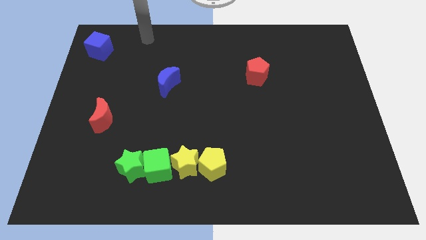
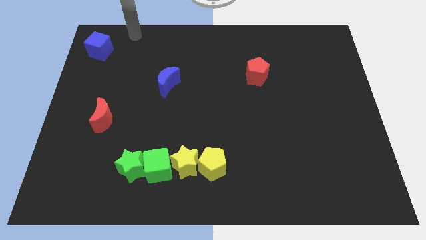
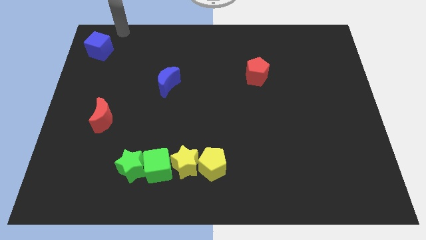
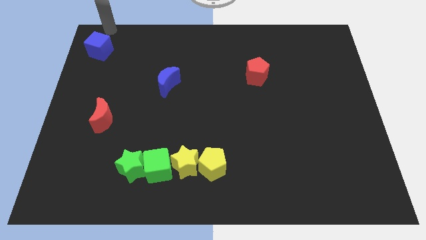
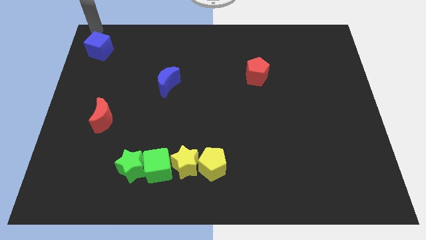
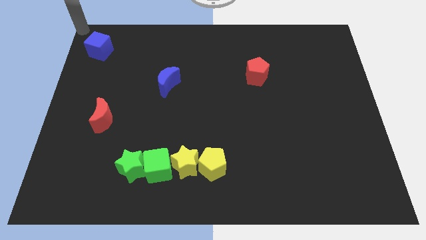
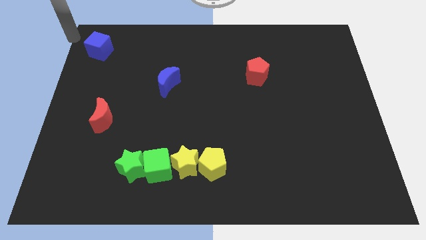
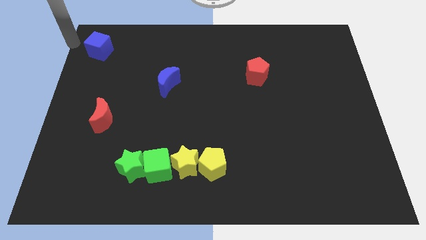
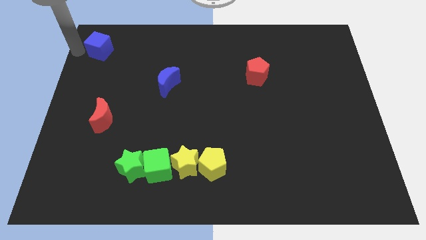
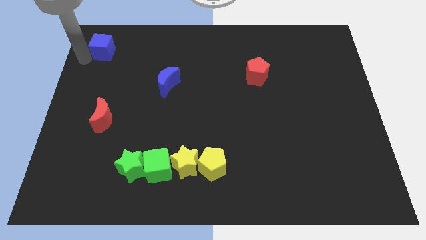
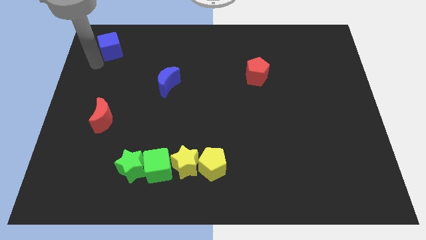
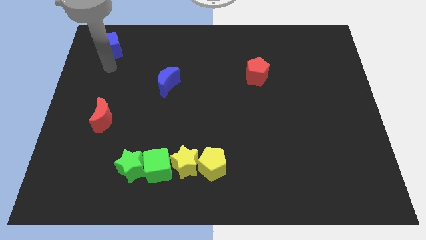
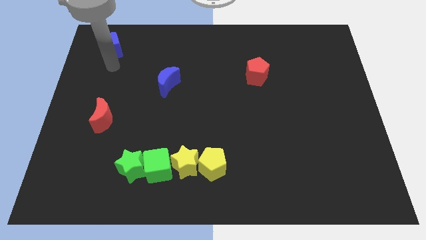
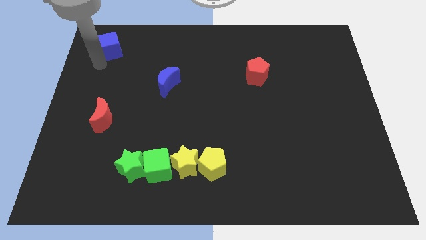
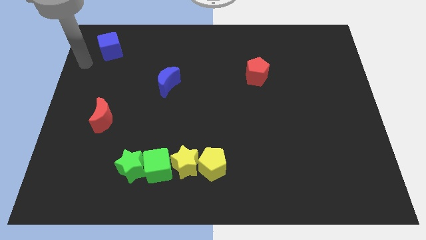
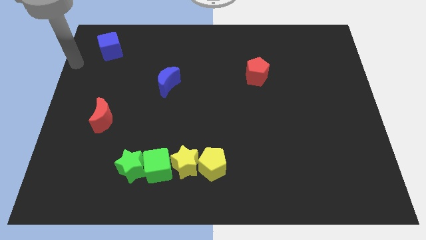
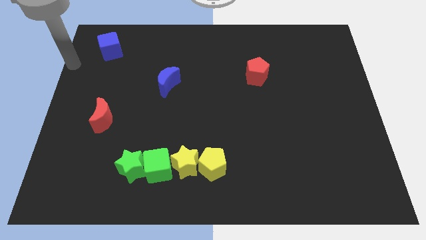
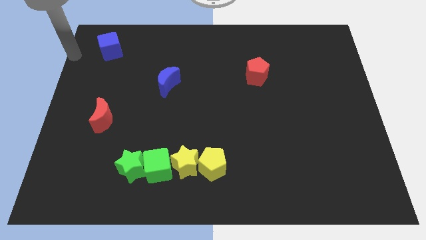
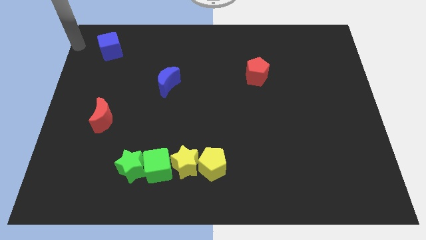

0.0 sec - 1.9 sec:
push blue cube towards its right

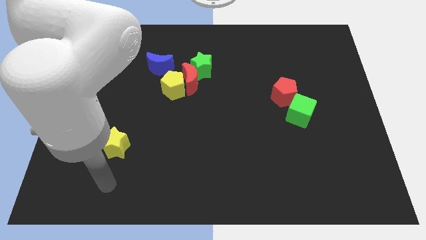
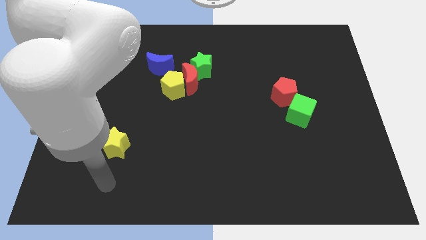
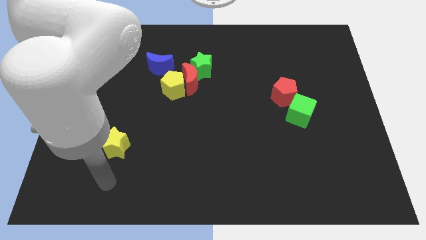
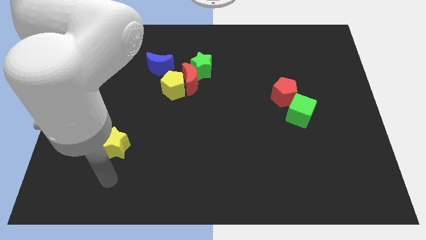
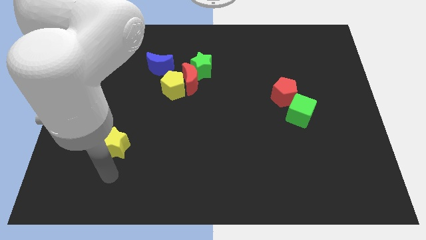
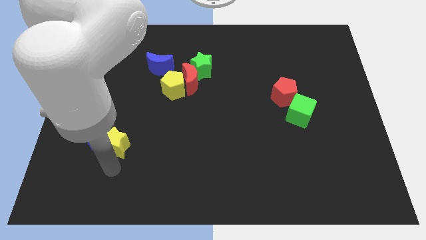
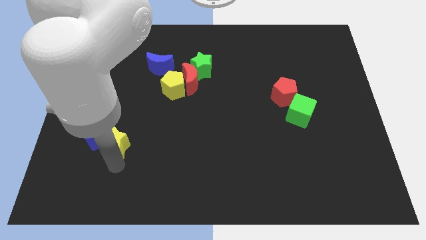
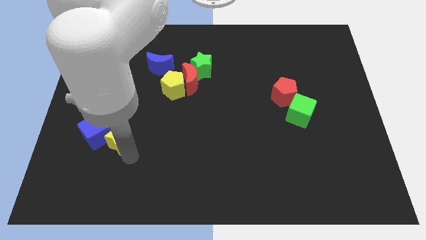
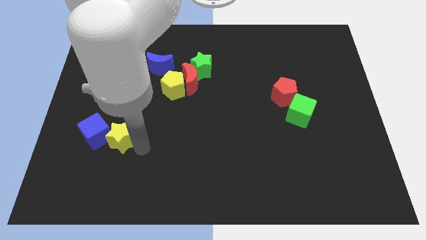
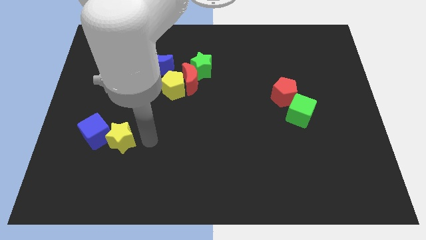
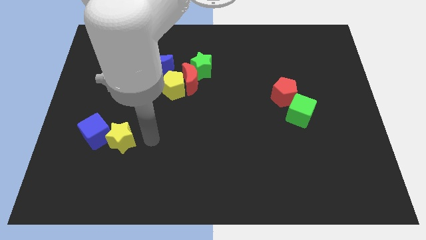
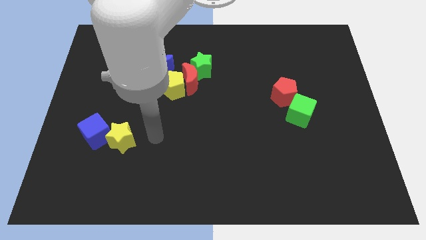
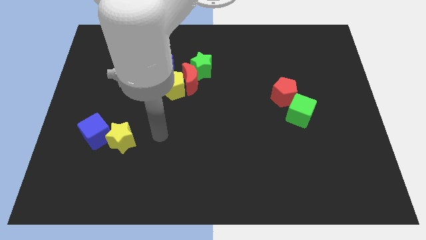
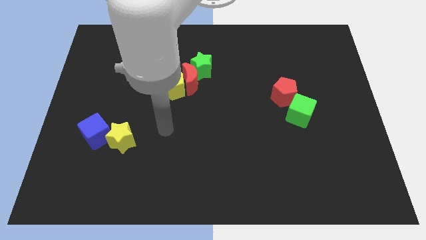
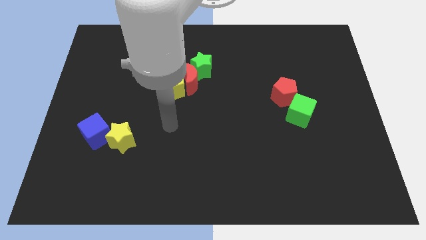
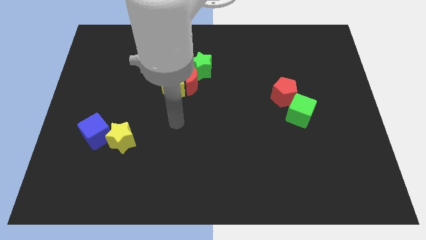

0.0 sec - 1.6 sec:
move the yellow star up slightly

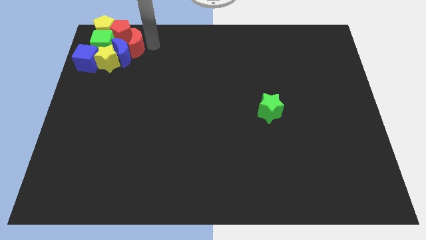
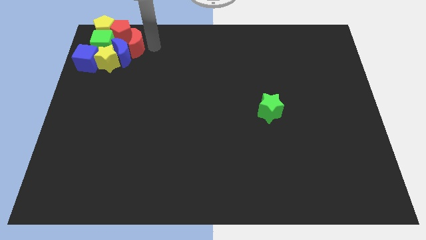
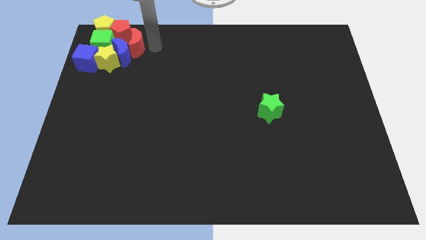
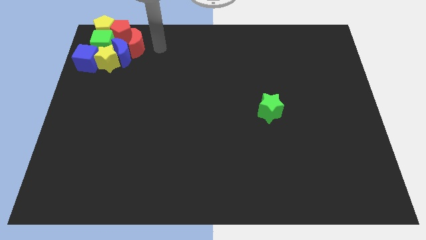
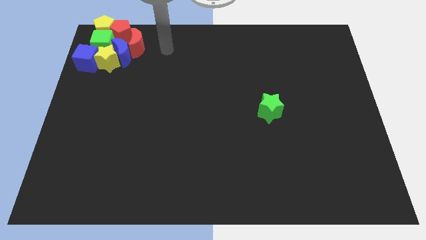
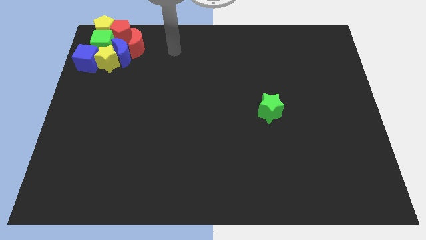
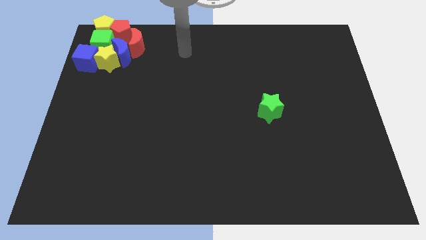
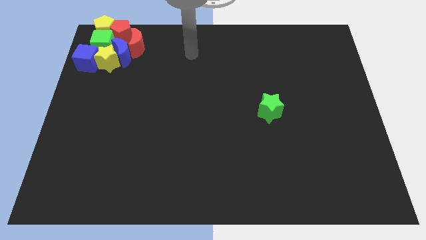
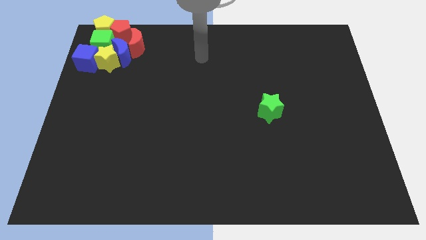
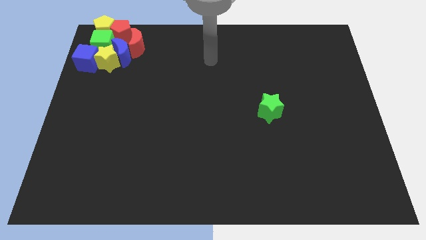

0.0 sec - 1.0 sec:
move the arm away from the red crescent

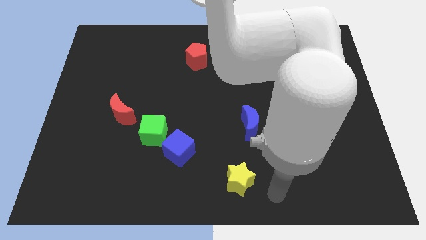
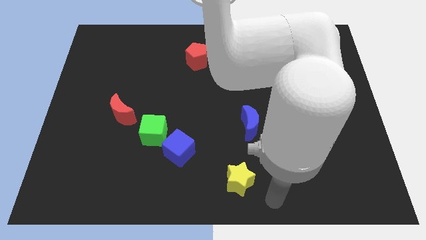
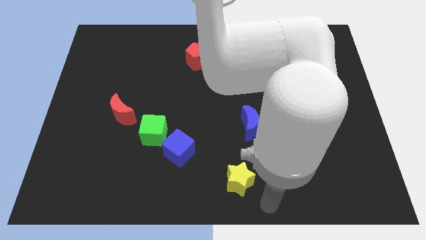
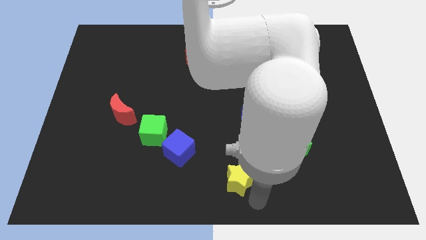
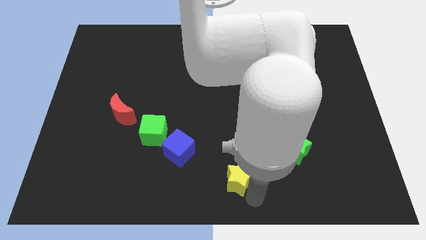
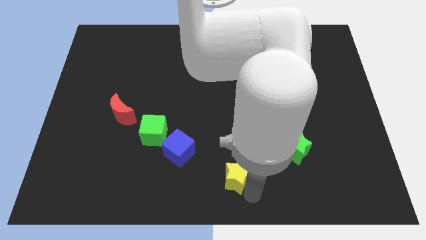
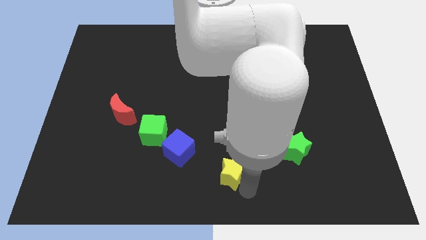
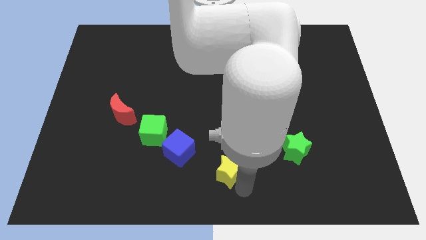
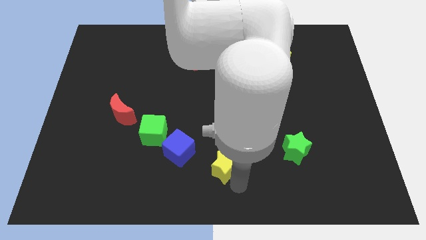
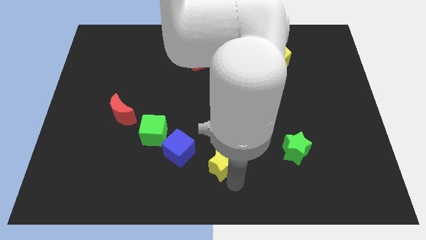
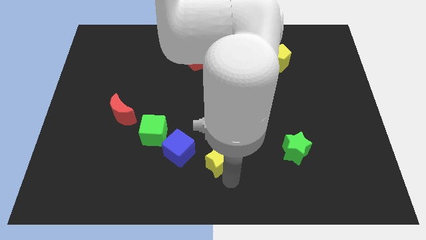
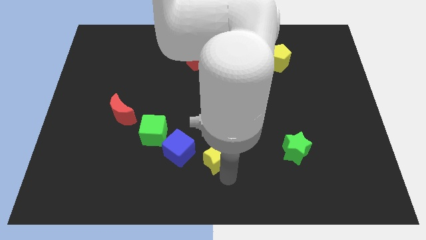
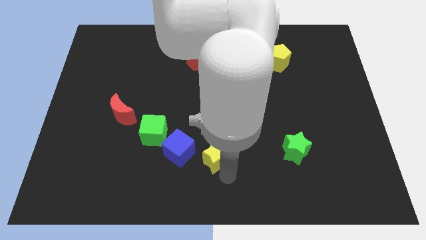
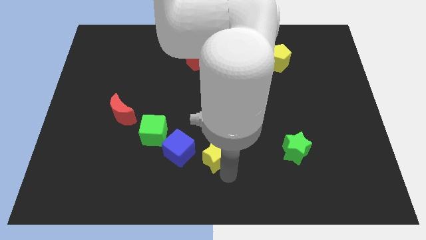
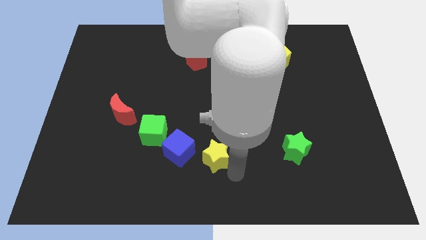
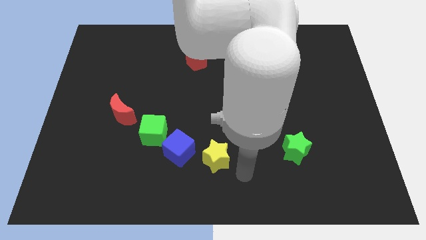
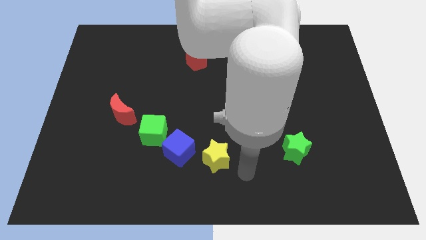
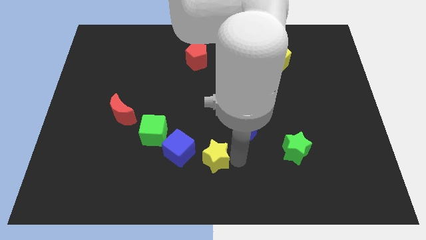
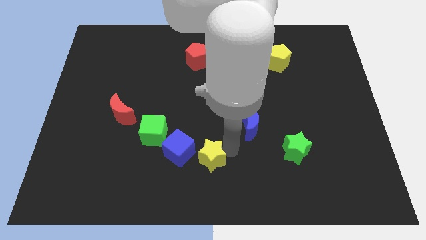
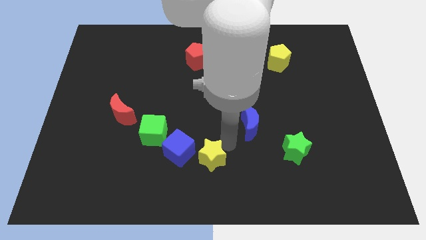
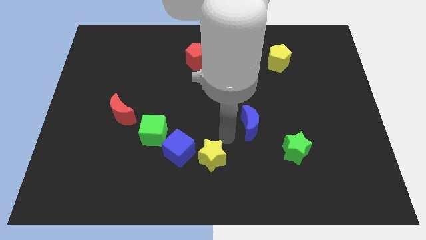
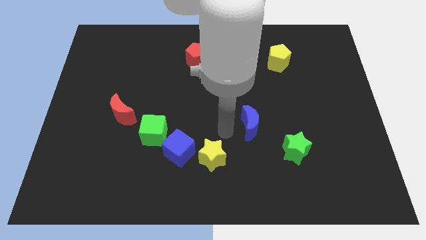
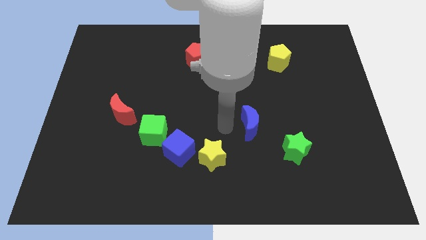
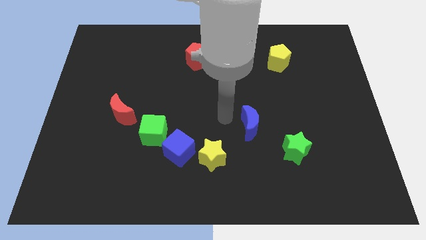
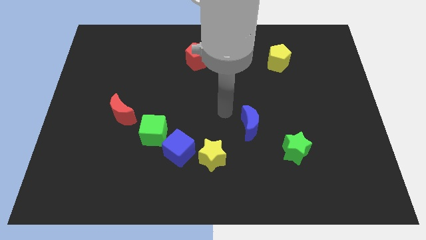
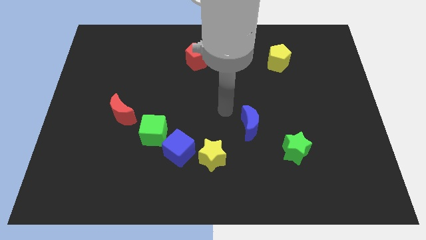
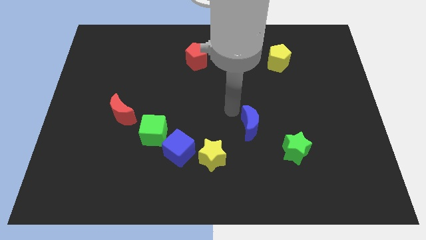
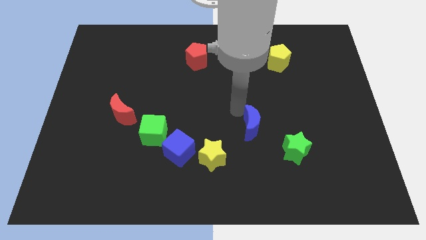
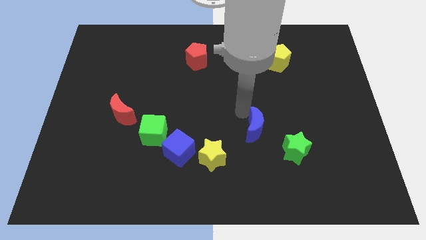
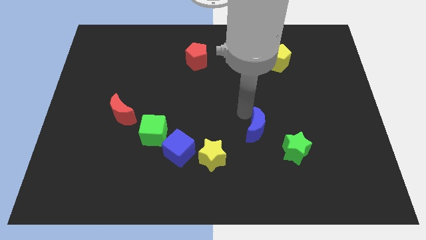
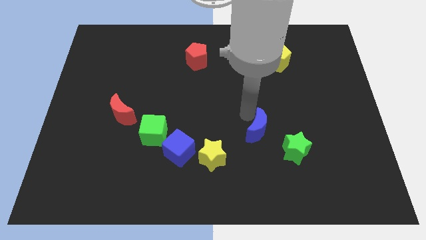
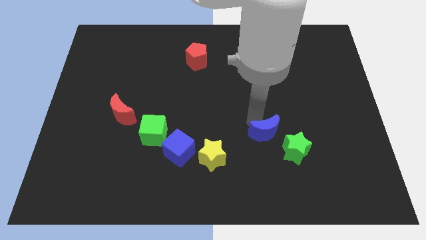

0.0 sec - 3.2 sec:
push the green star to the top right side of the blue cube

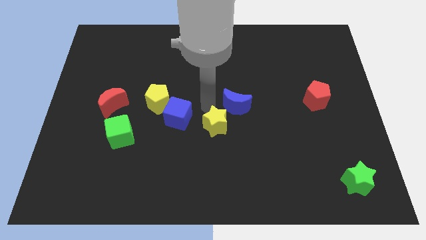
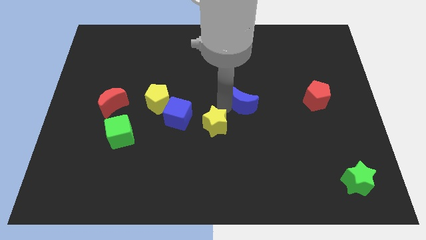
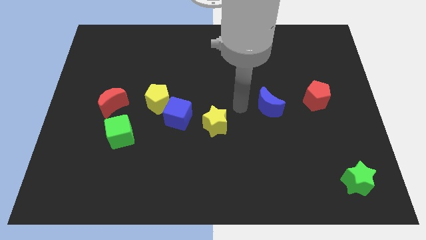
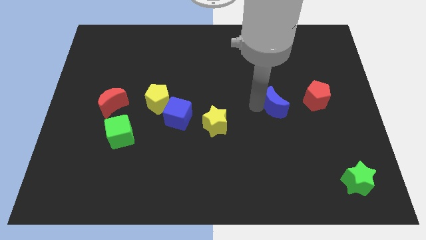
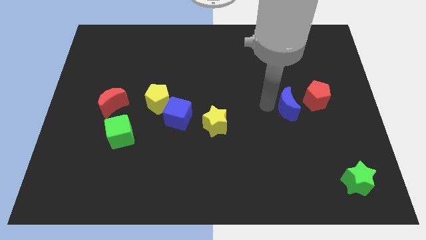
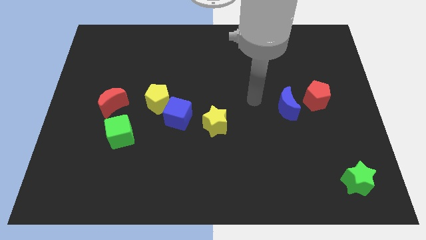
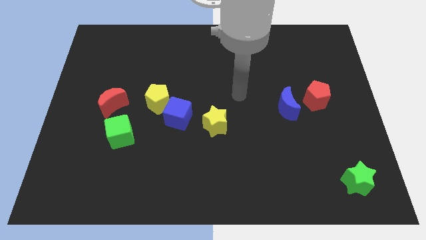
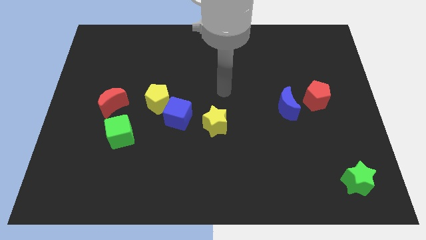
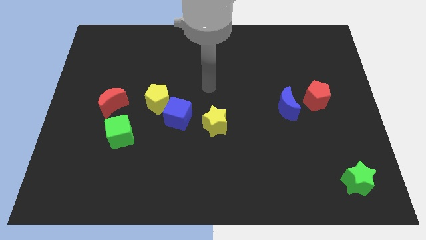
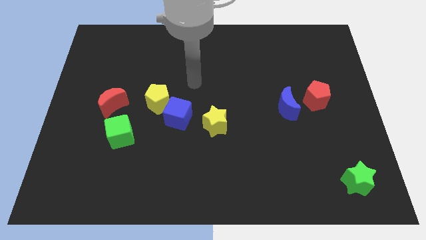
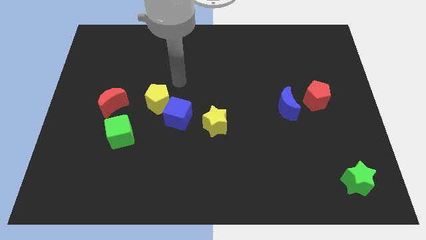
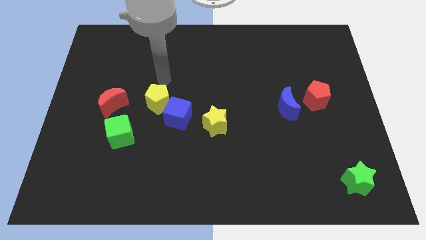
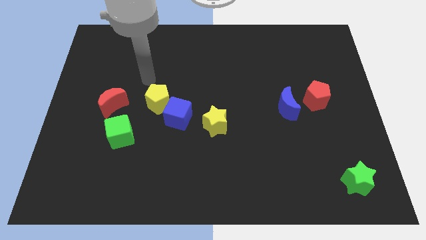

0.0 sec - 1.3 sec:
push the blue crescent towards the red pentagon

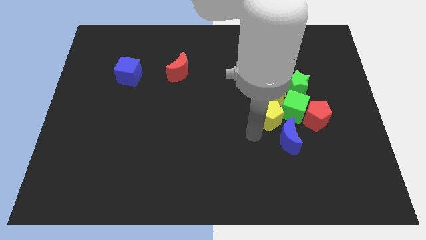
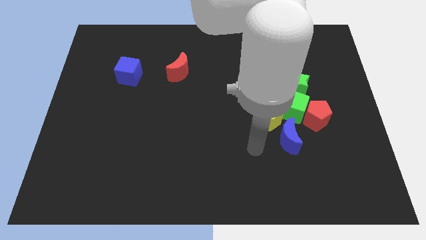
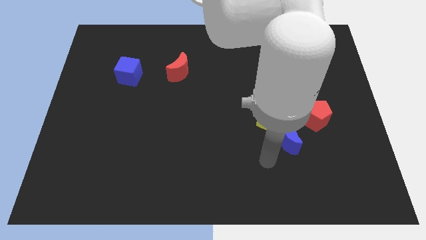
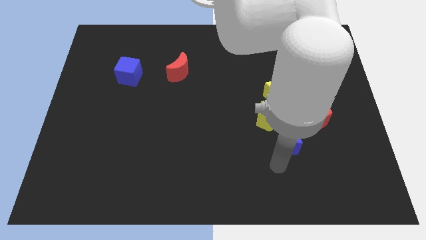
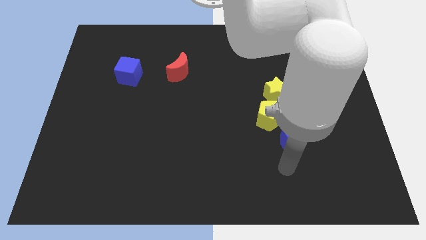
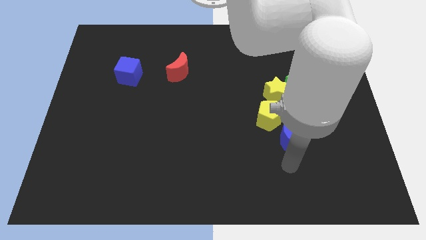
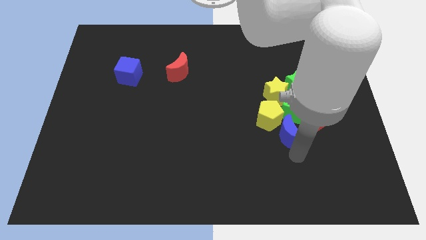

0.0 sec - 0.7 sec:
move the arm down to the blue moon
